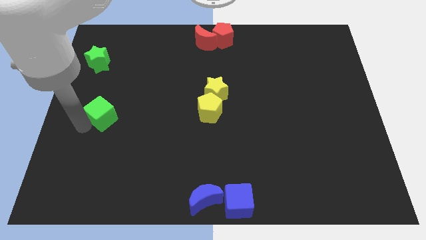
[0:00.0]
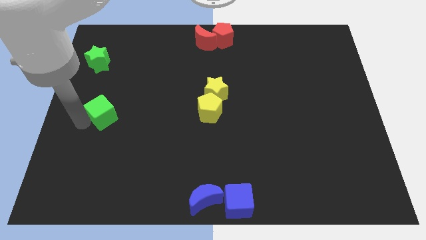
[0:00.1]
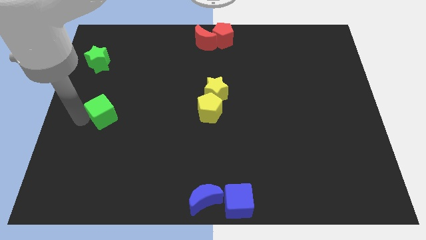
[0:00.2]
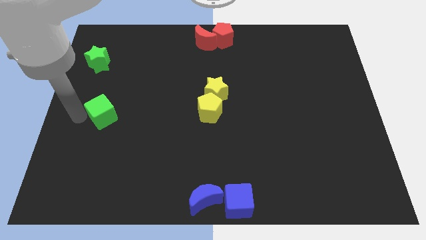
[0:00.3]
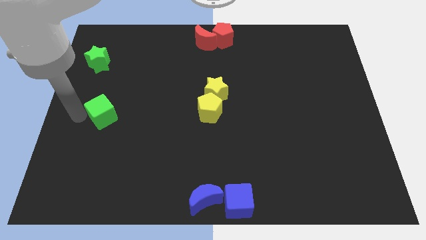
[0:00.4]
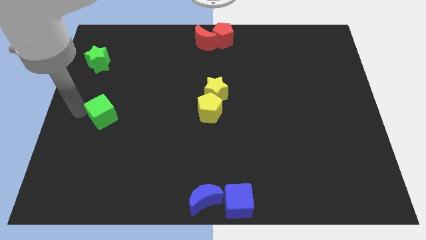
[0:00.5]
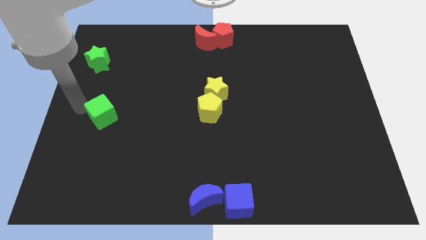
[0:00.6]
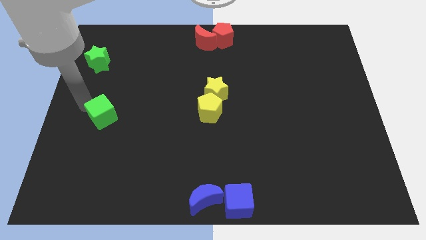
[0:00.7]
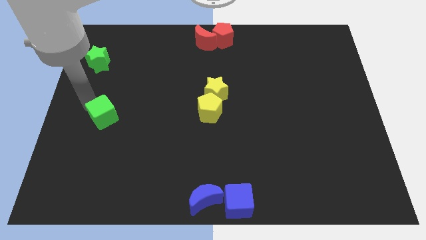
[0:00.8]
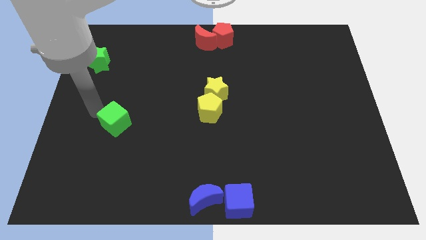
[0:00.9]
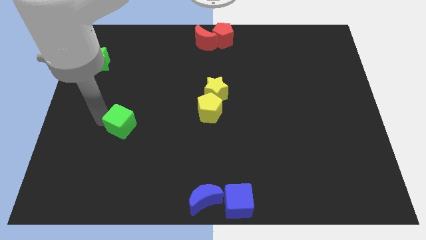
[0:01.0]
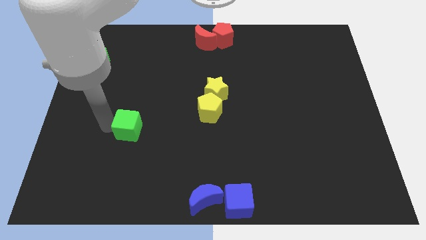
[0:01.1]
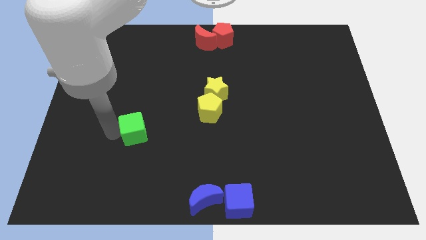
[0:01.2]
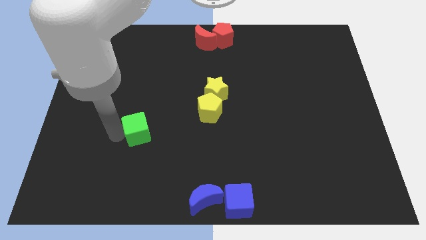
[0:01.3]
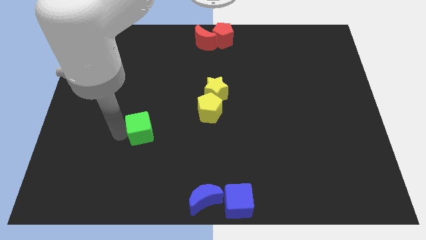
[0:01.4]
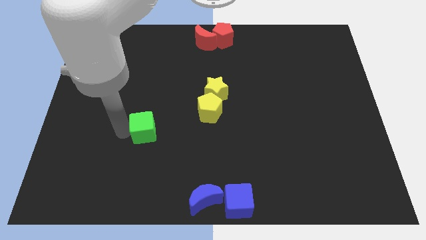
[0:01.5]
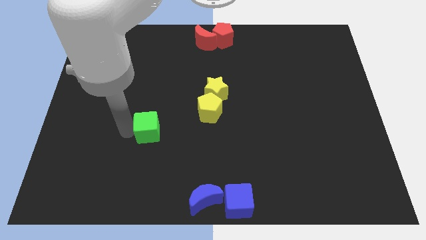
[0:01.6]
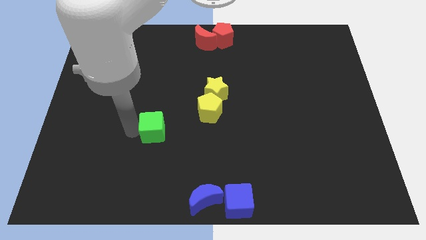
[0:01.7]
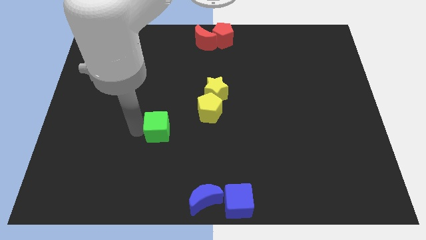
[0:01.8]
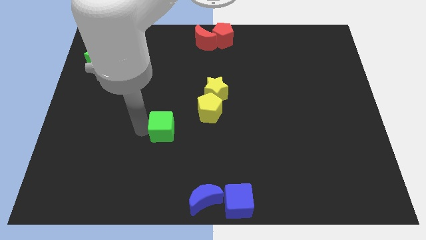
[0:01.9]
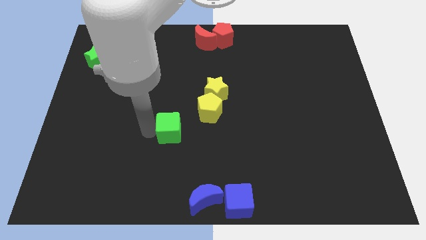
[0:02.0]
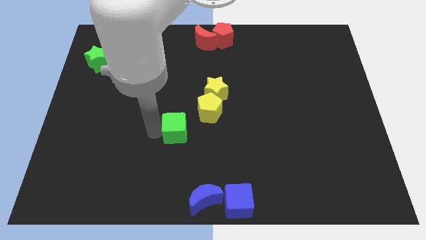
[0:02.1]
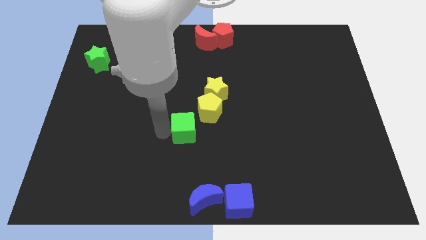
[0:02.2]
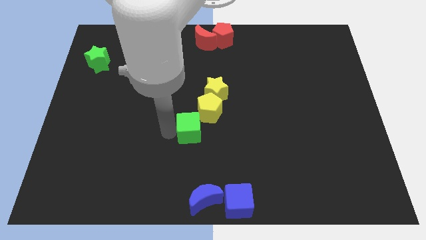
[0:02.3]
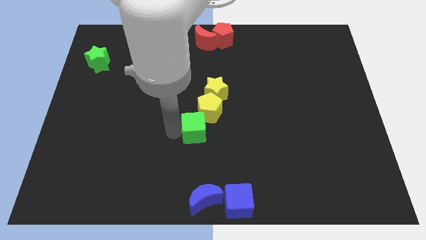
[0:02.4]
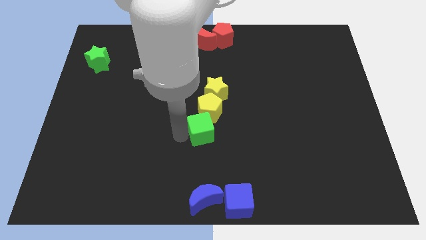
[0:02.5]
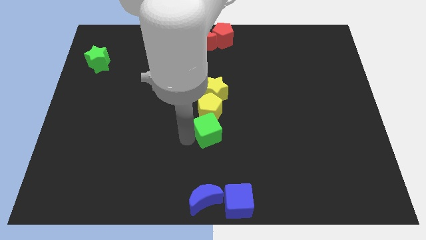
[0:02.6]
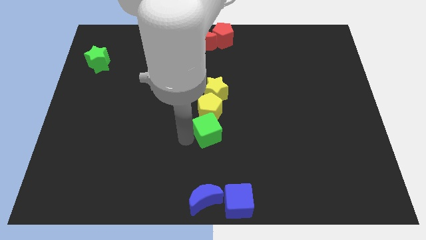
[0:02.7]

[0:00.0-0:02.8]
slide the green cube to the bottom of the yellow pentagon

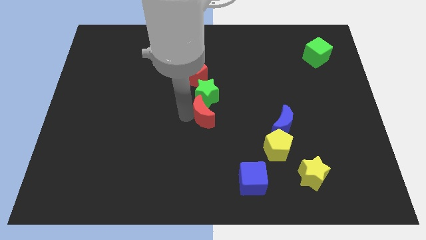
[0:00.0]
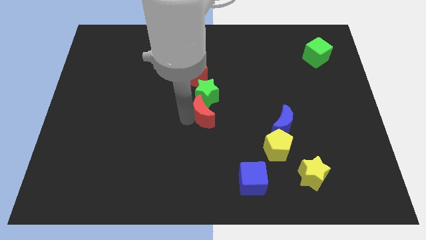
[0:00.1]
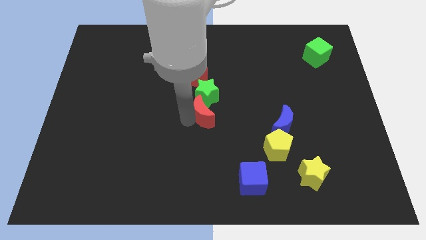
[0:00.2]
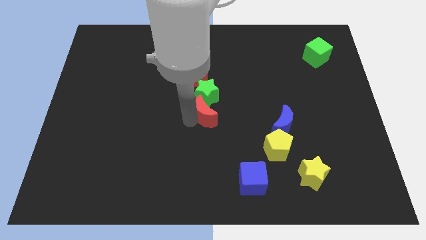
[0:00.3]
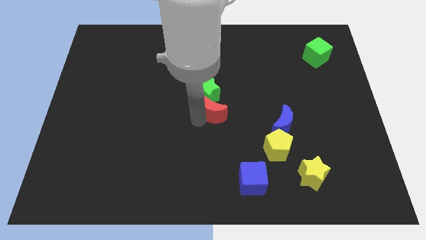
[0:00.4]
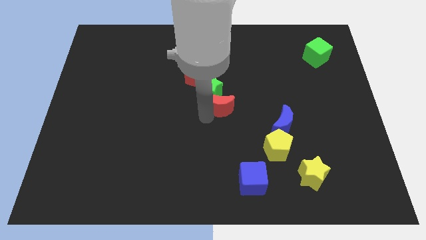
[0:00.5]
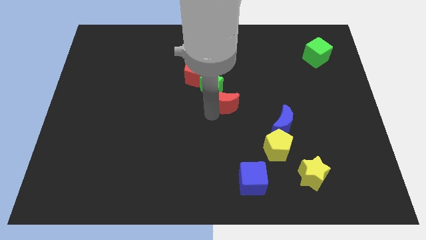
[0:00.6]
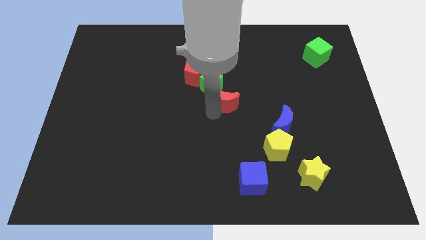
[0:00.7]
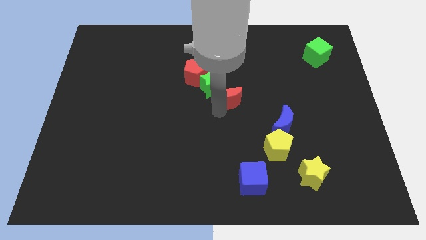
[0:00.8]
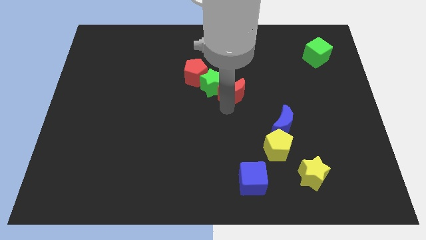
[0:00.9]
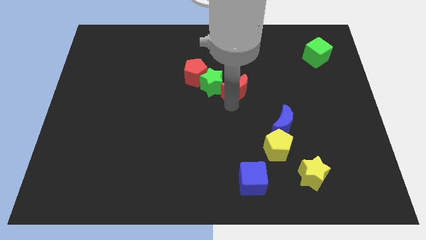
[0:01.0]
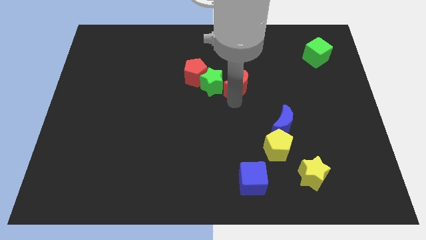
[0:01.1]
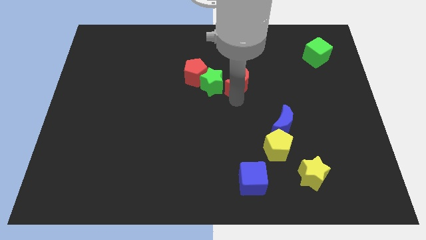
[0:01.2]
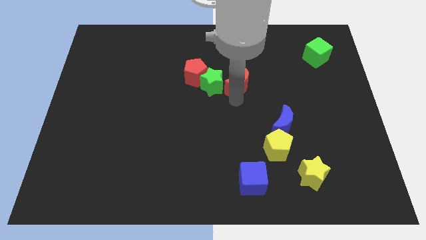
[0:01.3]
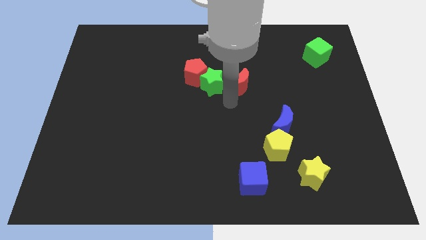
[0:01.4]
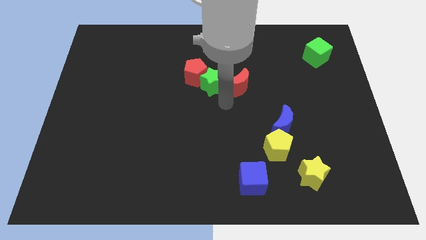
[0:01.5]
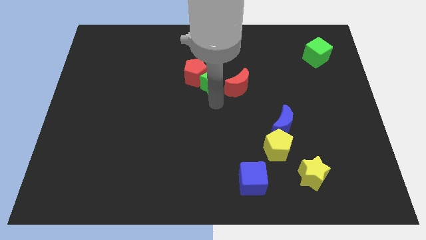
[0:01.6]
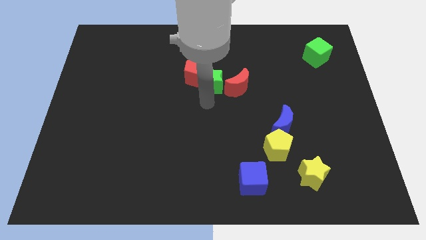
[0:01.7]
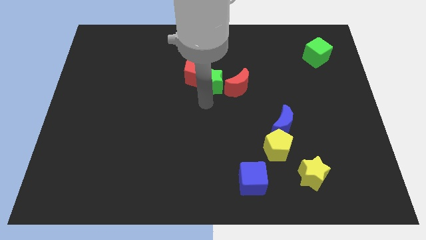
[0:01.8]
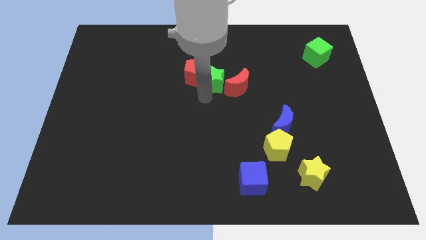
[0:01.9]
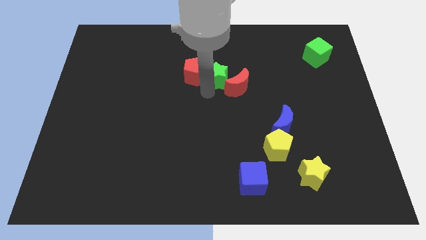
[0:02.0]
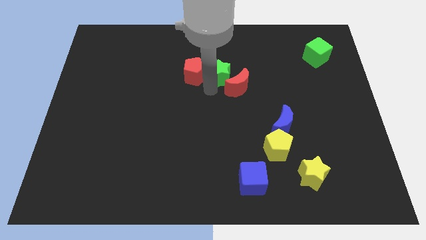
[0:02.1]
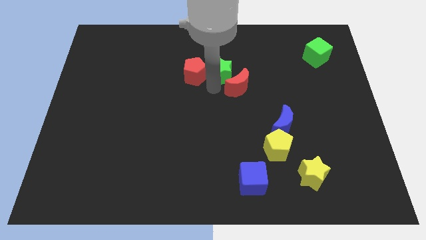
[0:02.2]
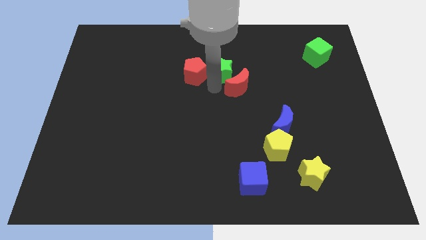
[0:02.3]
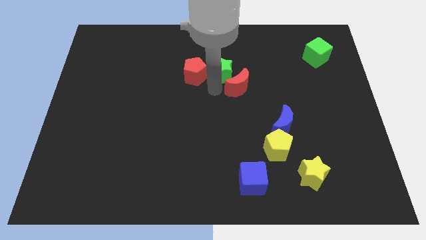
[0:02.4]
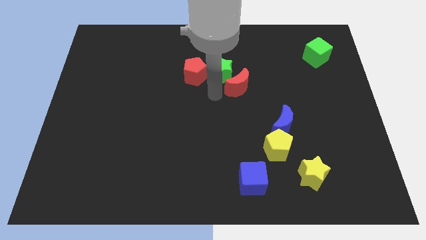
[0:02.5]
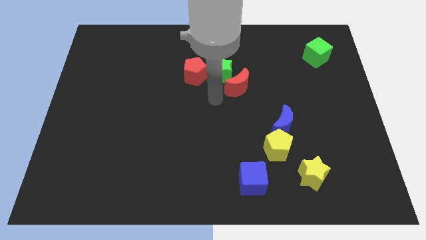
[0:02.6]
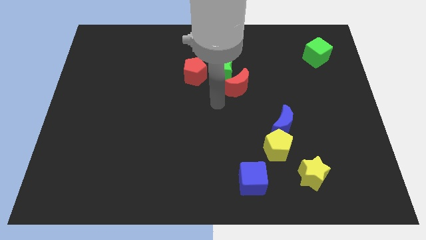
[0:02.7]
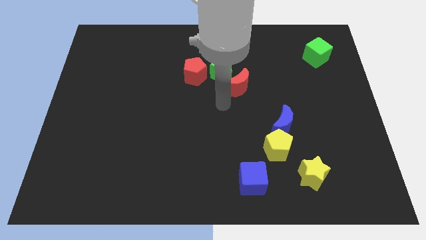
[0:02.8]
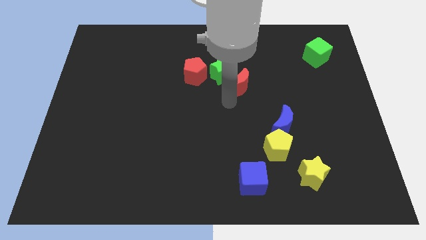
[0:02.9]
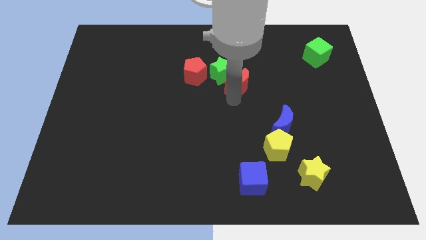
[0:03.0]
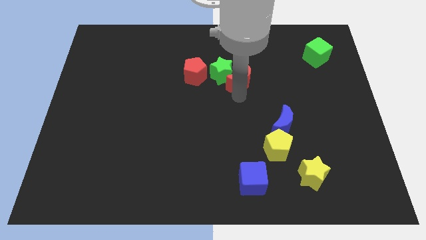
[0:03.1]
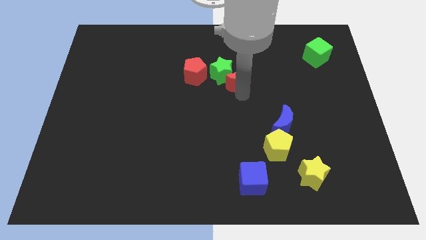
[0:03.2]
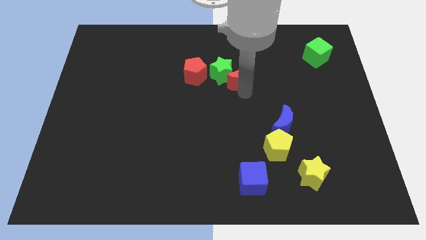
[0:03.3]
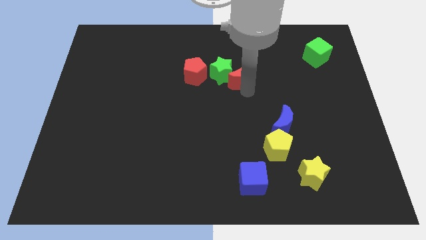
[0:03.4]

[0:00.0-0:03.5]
move green star and red moon right beside the red pentagon

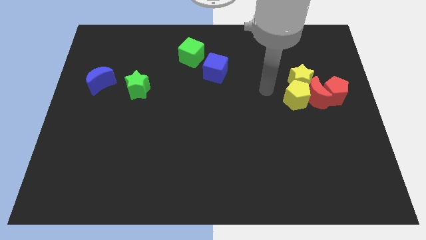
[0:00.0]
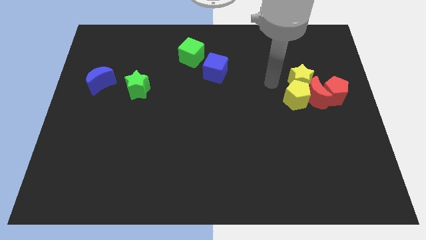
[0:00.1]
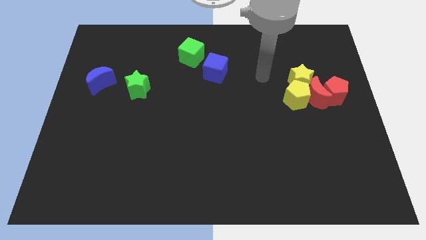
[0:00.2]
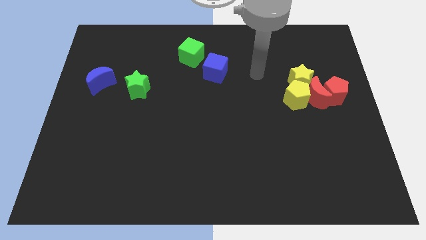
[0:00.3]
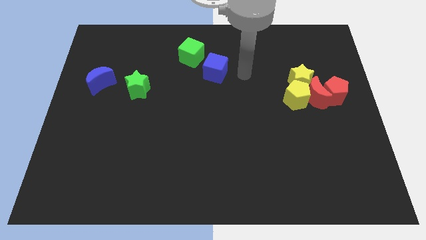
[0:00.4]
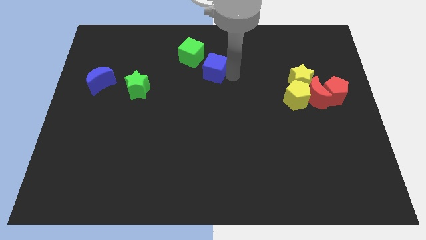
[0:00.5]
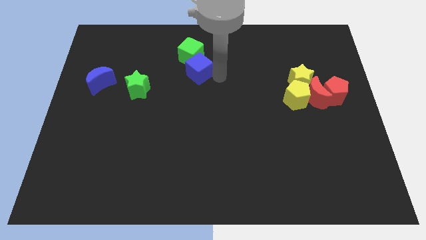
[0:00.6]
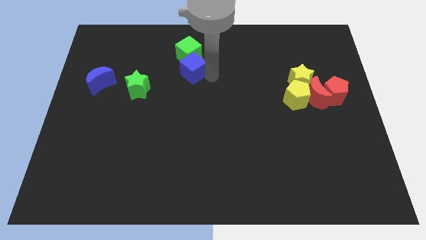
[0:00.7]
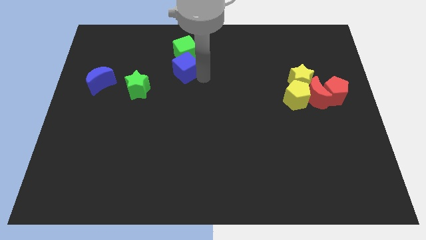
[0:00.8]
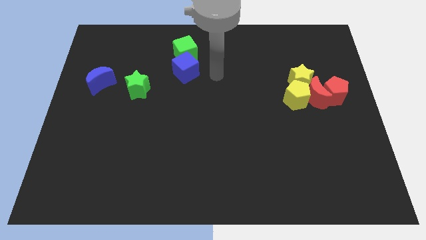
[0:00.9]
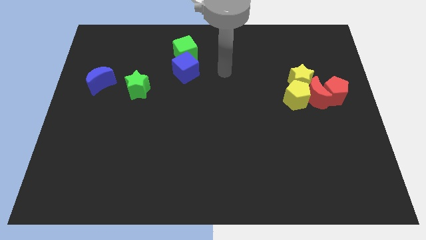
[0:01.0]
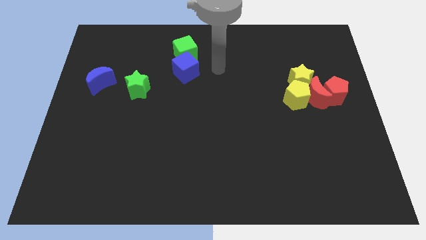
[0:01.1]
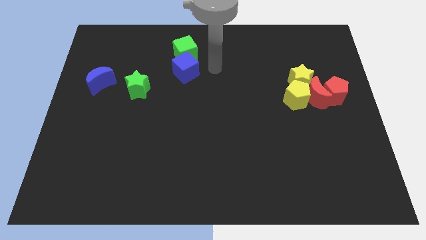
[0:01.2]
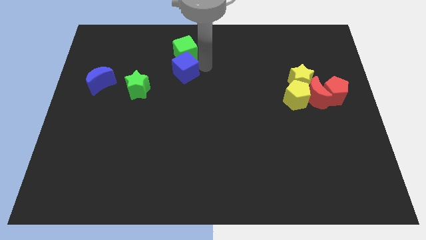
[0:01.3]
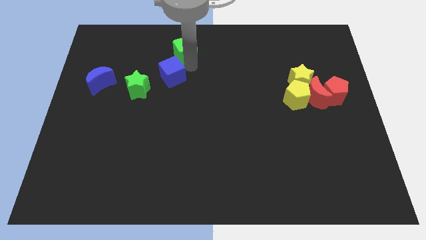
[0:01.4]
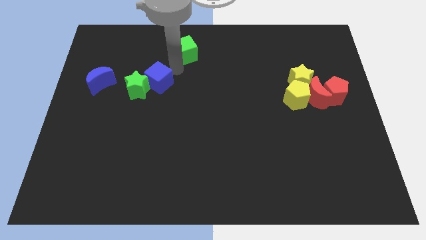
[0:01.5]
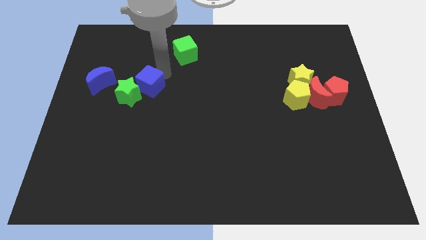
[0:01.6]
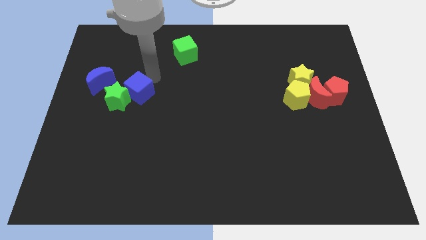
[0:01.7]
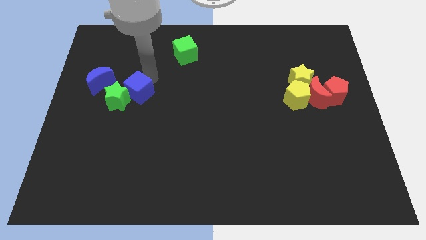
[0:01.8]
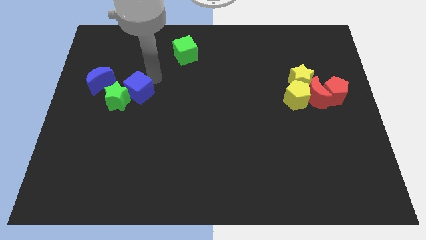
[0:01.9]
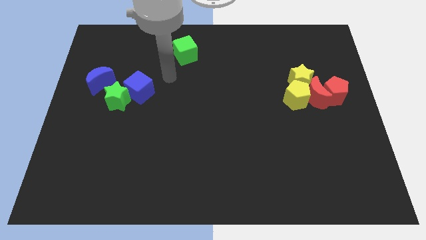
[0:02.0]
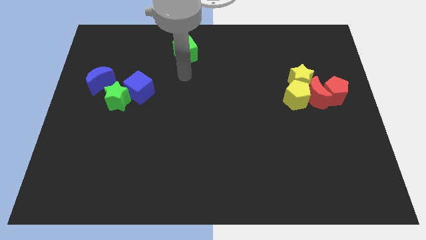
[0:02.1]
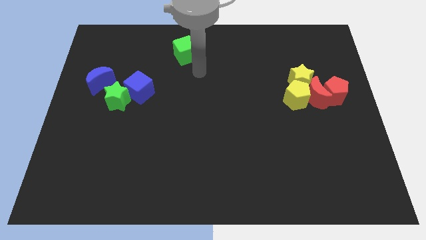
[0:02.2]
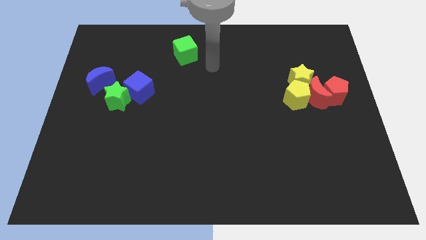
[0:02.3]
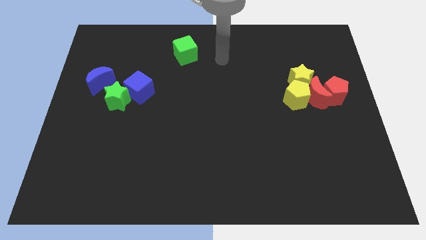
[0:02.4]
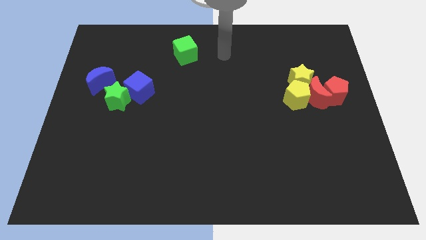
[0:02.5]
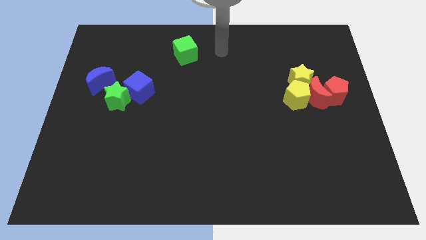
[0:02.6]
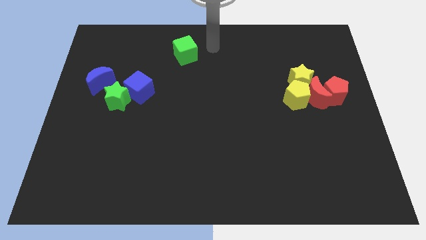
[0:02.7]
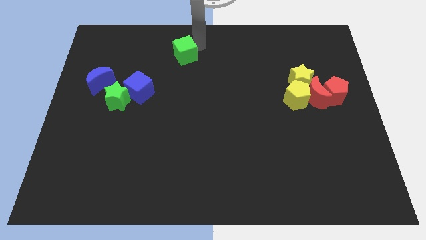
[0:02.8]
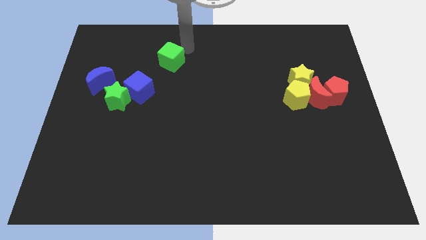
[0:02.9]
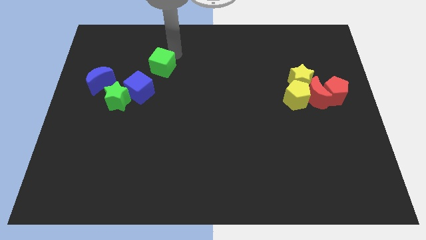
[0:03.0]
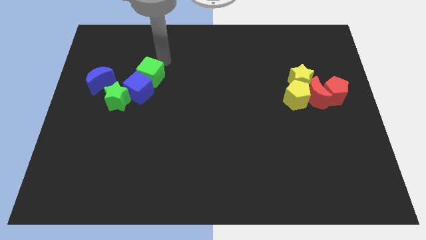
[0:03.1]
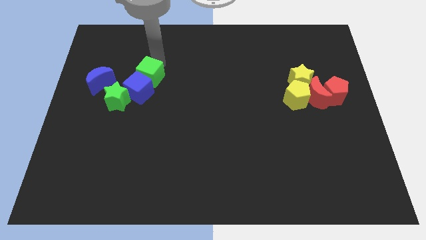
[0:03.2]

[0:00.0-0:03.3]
place green cube below blue cube
